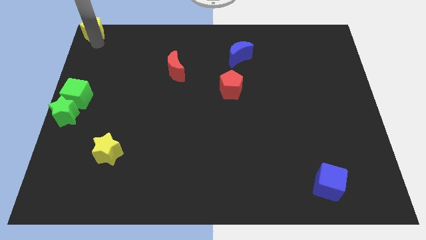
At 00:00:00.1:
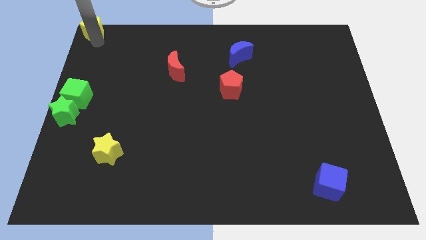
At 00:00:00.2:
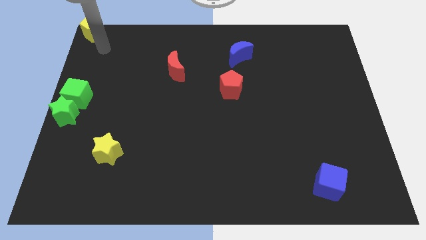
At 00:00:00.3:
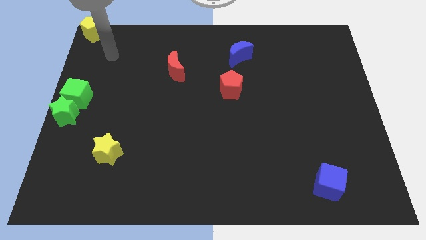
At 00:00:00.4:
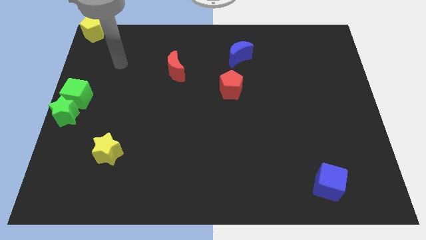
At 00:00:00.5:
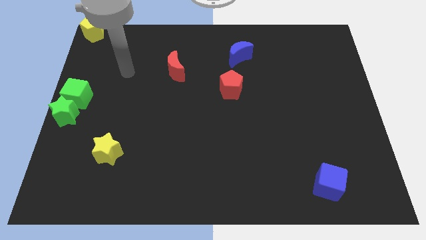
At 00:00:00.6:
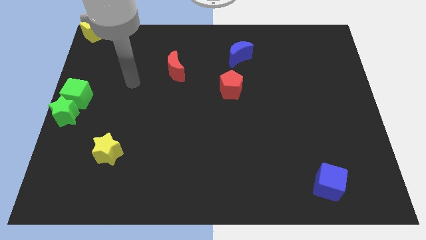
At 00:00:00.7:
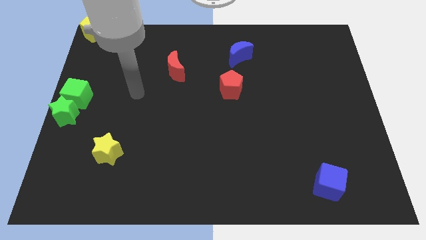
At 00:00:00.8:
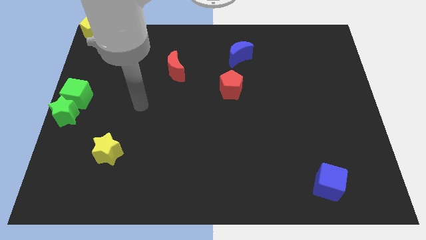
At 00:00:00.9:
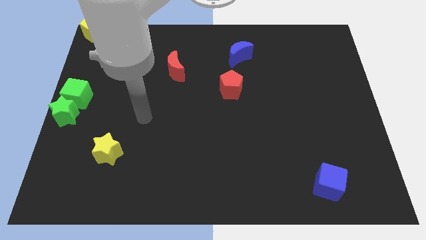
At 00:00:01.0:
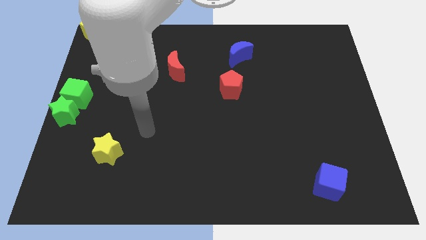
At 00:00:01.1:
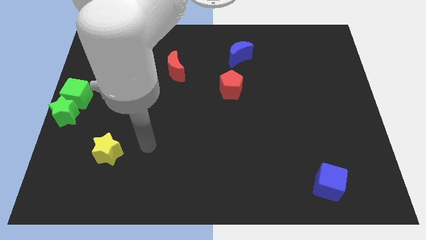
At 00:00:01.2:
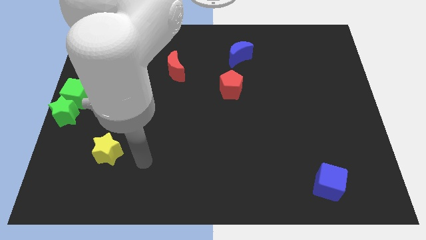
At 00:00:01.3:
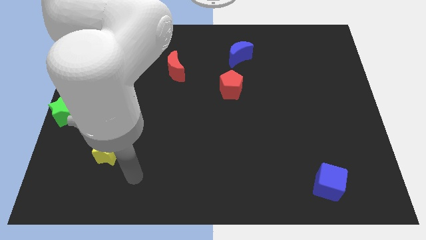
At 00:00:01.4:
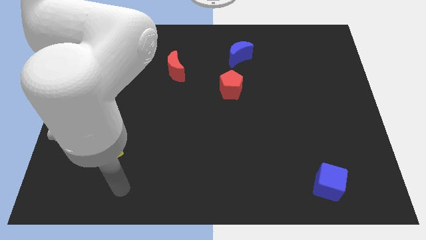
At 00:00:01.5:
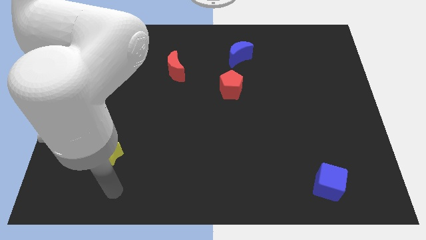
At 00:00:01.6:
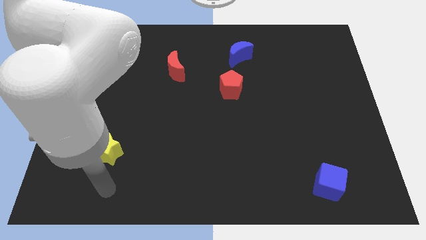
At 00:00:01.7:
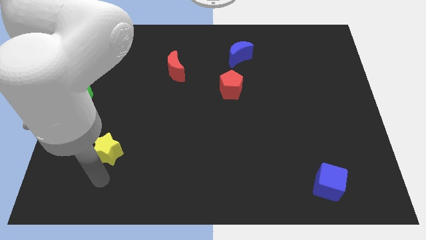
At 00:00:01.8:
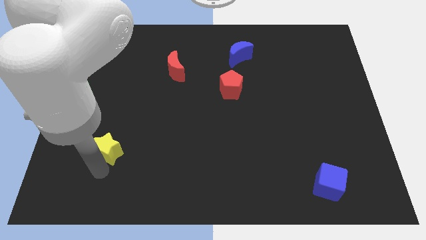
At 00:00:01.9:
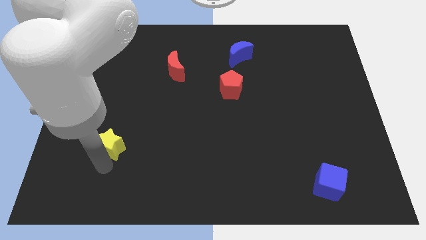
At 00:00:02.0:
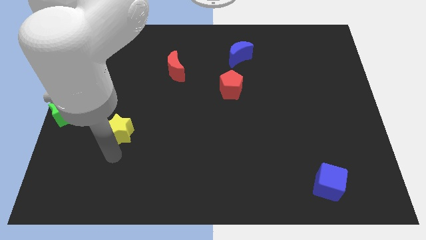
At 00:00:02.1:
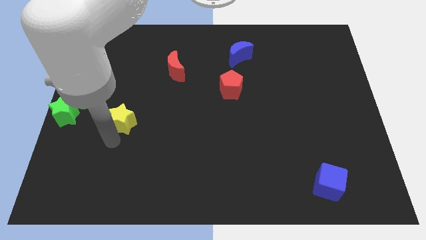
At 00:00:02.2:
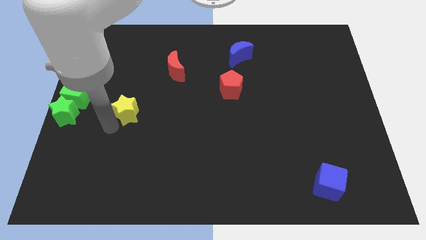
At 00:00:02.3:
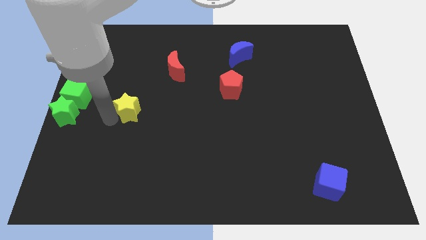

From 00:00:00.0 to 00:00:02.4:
move the arm away from the yellow pentagon

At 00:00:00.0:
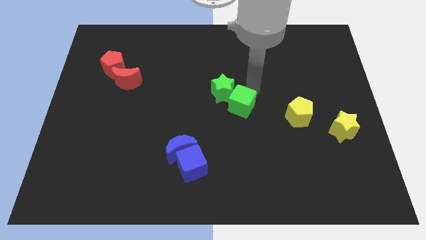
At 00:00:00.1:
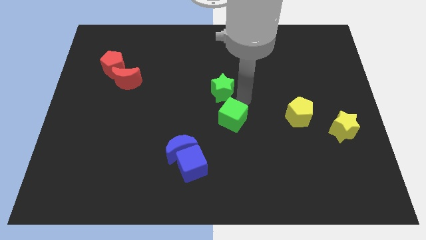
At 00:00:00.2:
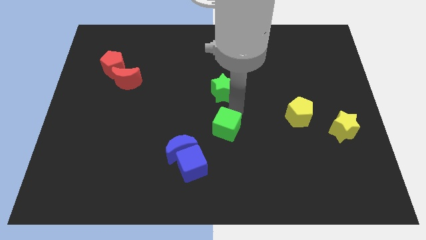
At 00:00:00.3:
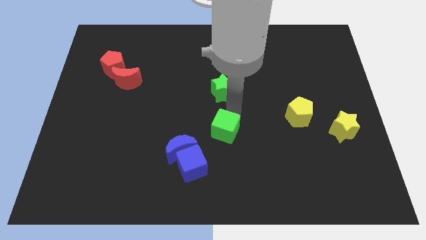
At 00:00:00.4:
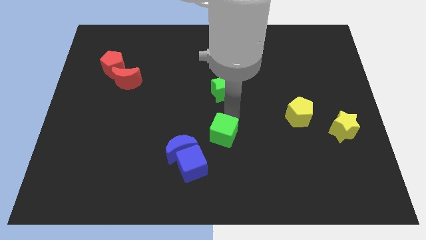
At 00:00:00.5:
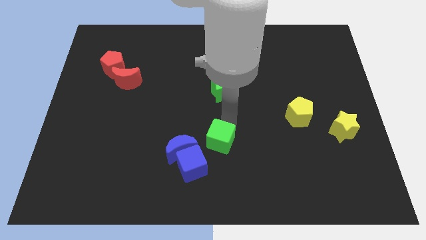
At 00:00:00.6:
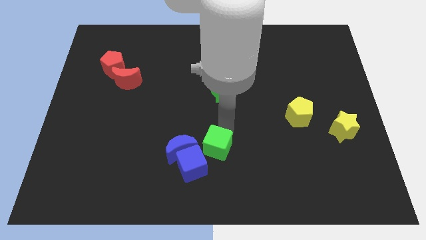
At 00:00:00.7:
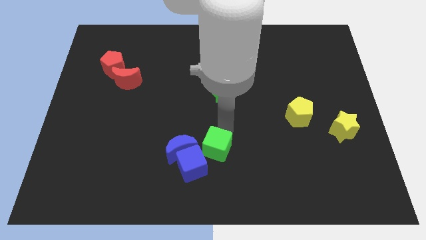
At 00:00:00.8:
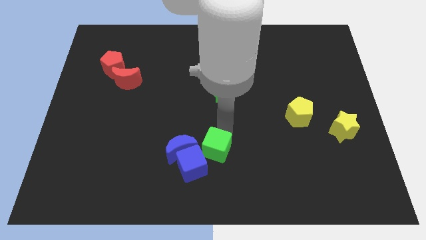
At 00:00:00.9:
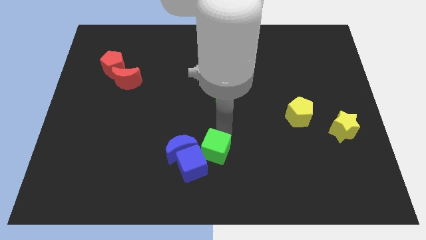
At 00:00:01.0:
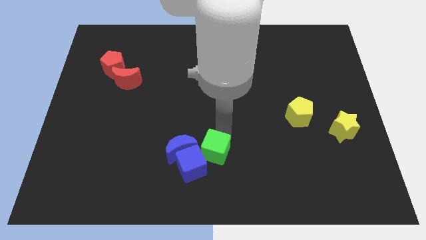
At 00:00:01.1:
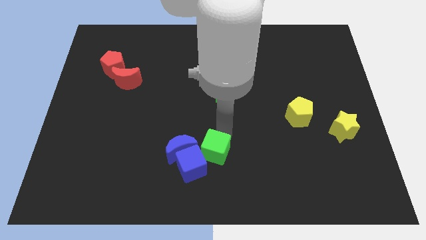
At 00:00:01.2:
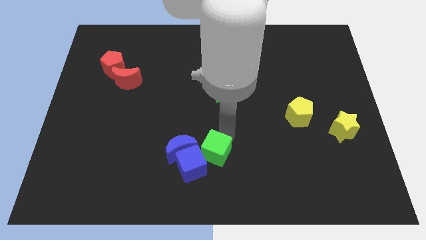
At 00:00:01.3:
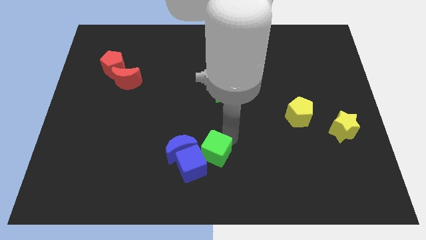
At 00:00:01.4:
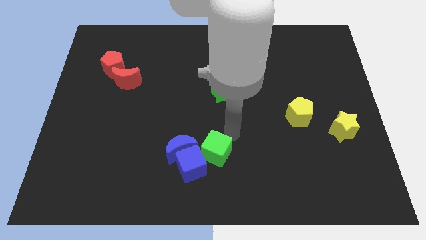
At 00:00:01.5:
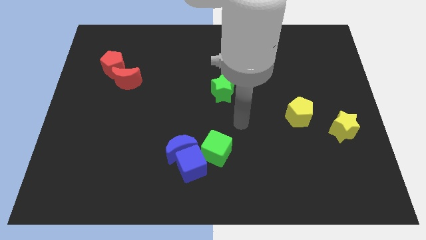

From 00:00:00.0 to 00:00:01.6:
push the green cube towards the blue cube

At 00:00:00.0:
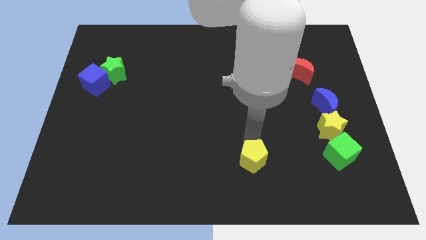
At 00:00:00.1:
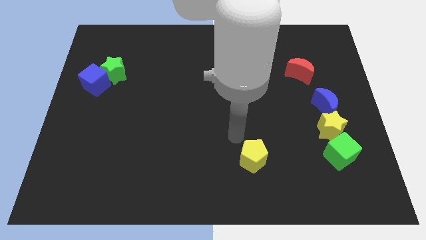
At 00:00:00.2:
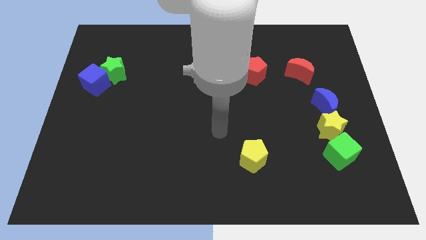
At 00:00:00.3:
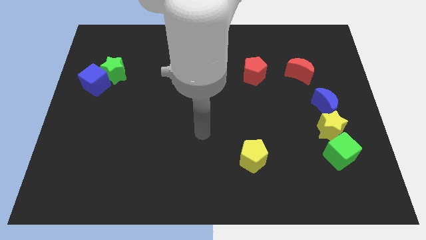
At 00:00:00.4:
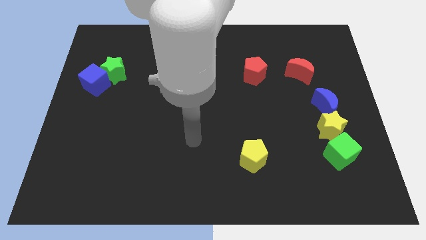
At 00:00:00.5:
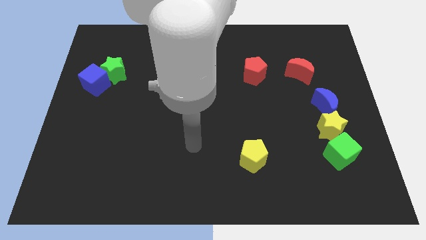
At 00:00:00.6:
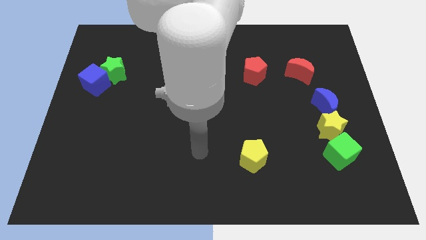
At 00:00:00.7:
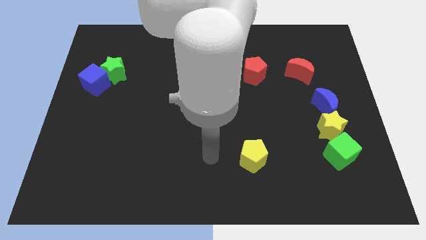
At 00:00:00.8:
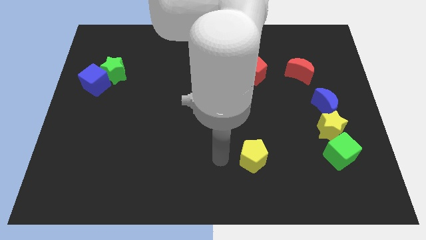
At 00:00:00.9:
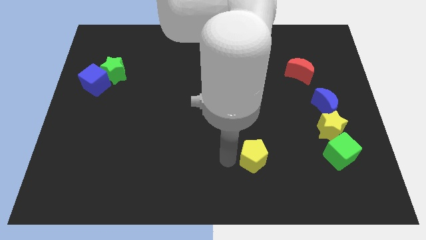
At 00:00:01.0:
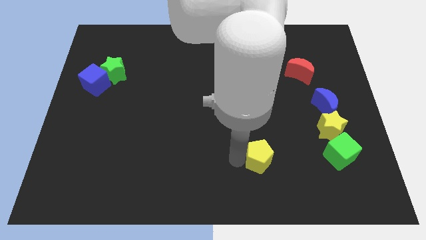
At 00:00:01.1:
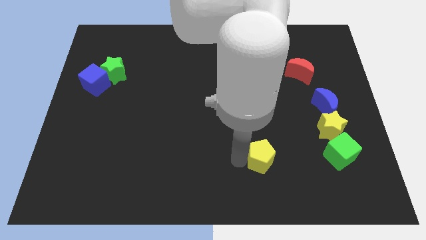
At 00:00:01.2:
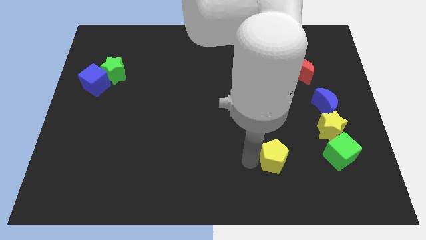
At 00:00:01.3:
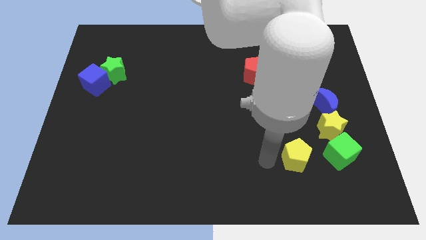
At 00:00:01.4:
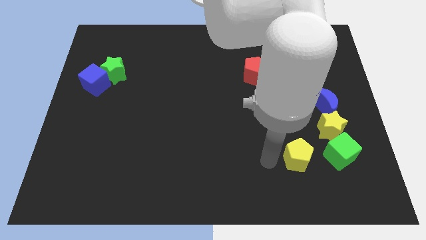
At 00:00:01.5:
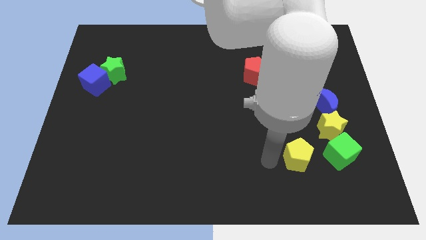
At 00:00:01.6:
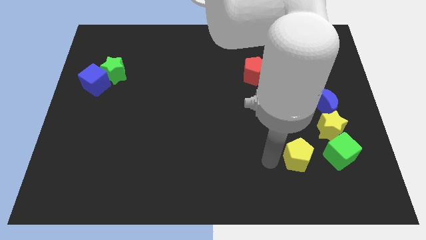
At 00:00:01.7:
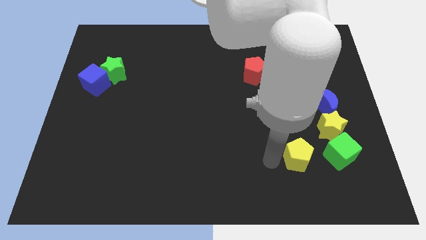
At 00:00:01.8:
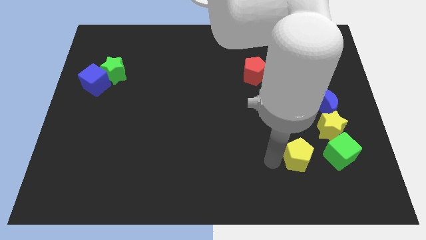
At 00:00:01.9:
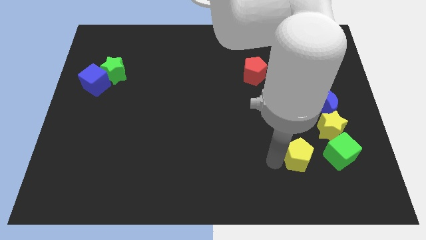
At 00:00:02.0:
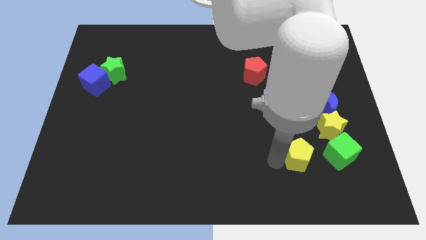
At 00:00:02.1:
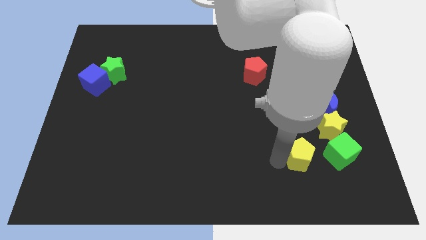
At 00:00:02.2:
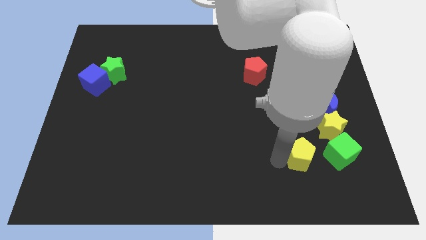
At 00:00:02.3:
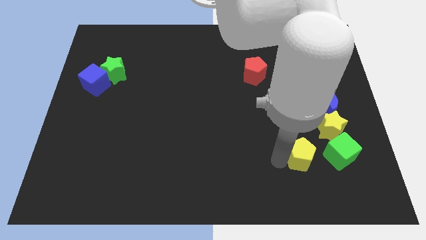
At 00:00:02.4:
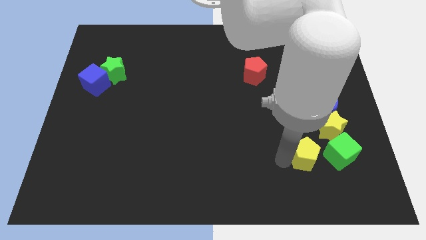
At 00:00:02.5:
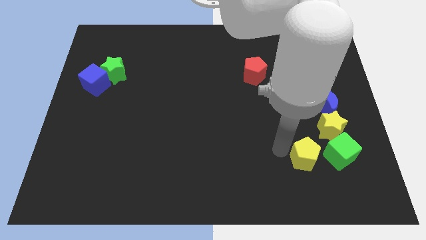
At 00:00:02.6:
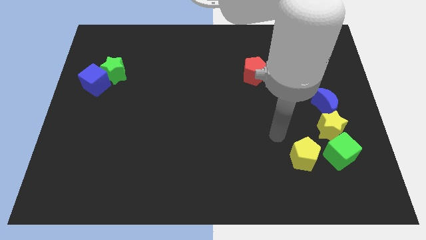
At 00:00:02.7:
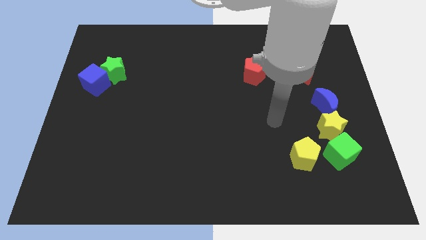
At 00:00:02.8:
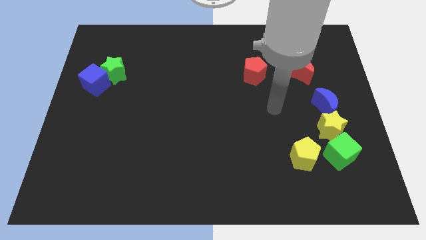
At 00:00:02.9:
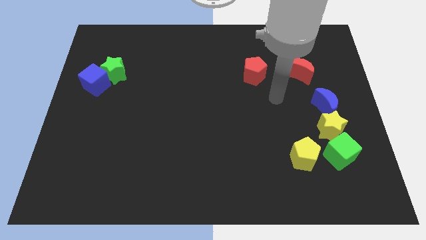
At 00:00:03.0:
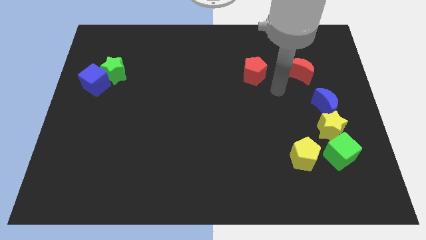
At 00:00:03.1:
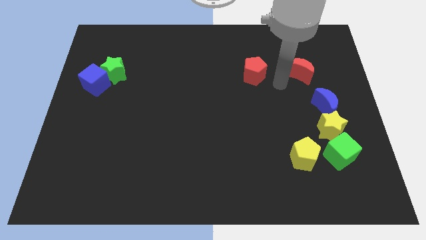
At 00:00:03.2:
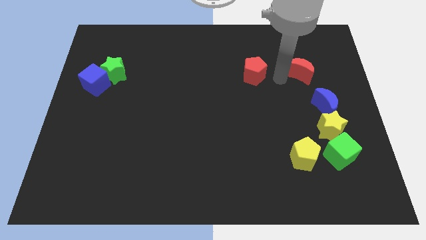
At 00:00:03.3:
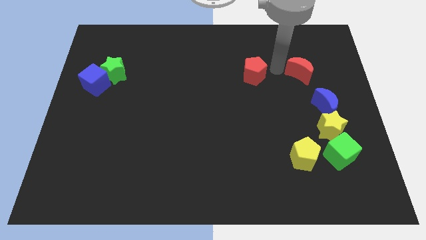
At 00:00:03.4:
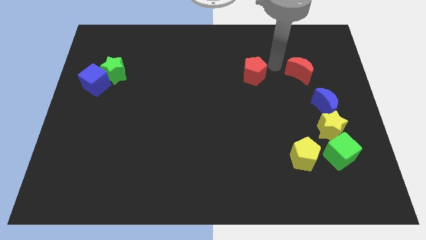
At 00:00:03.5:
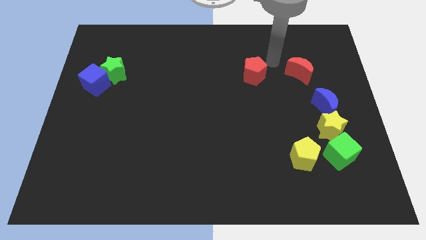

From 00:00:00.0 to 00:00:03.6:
move the yellow pentagon left beside the green cube

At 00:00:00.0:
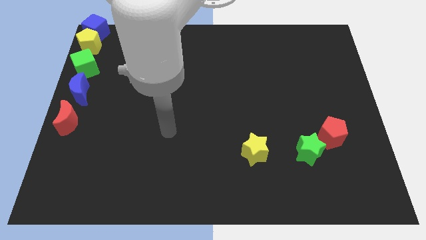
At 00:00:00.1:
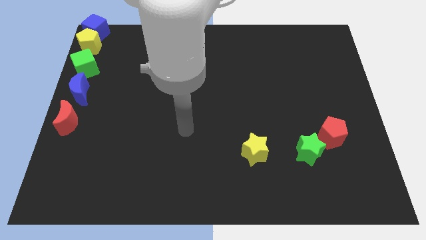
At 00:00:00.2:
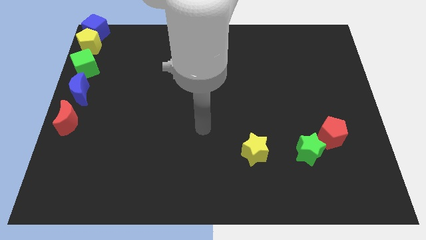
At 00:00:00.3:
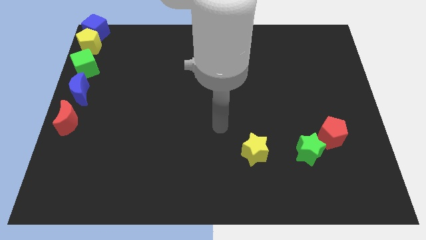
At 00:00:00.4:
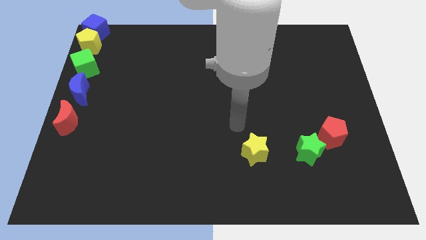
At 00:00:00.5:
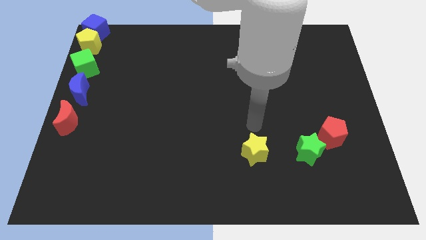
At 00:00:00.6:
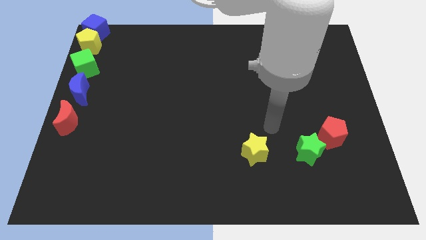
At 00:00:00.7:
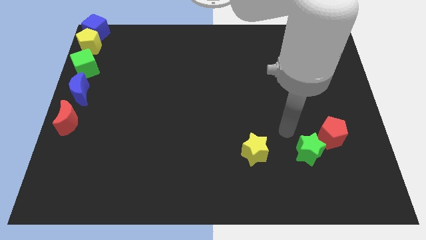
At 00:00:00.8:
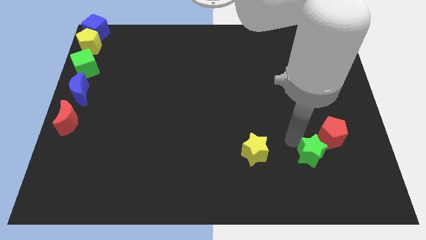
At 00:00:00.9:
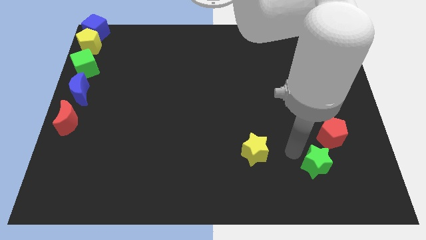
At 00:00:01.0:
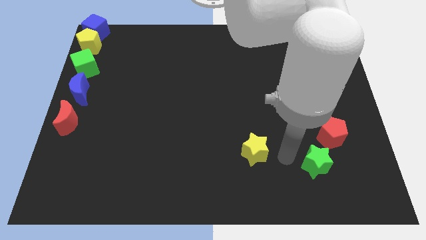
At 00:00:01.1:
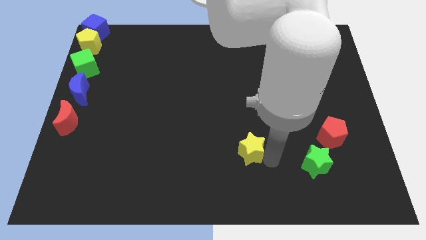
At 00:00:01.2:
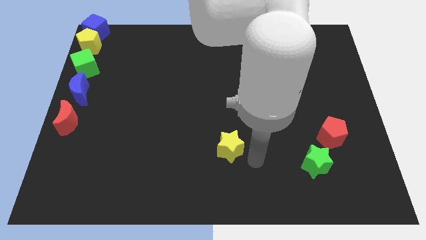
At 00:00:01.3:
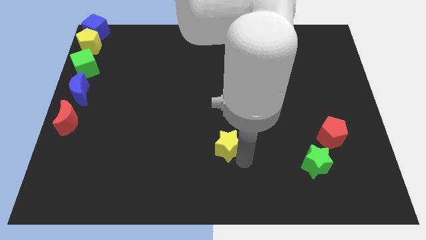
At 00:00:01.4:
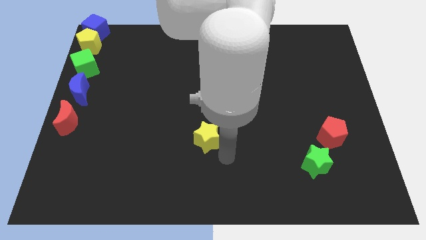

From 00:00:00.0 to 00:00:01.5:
push the green star towards the bottom left of the red pentagon
